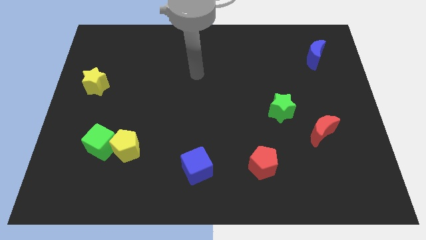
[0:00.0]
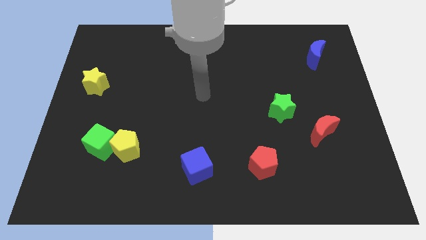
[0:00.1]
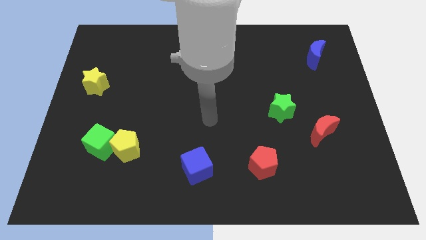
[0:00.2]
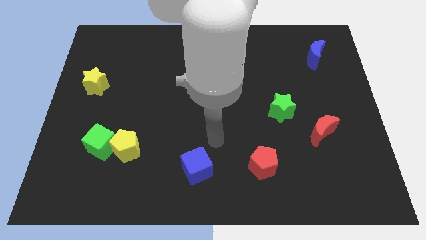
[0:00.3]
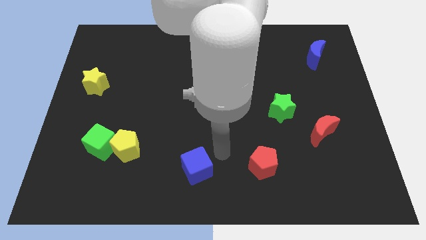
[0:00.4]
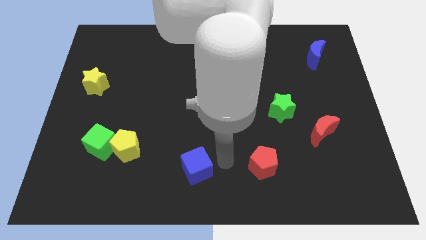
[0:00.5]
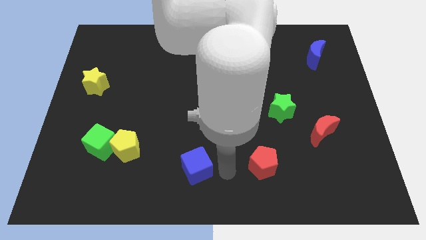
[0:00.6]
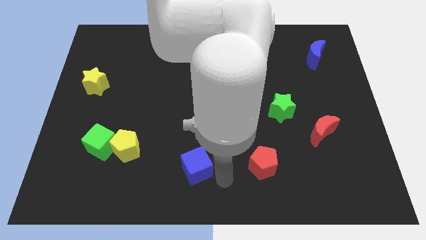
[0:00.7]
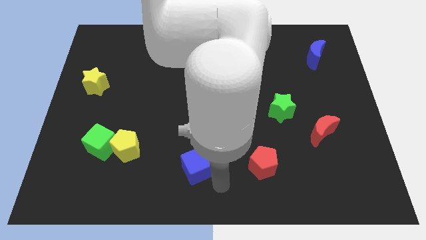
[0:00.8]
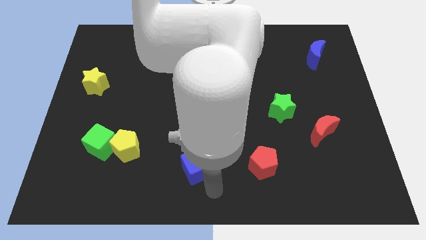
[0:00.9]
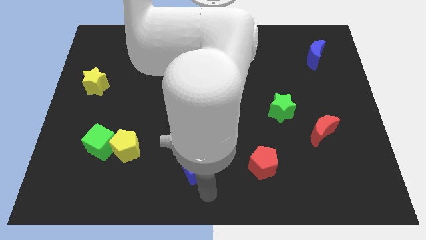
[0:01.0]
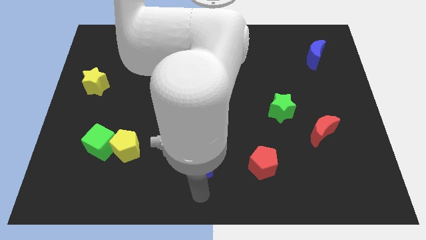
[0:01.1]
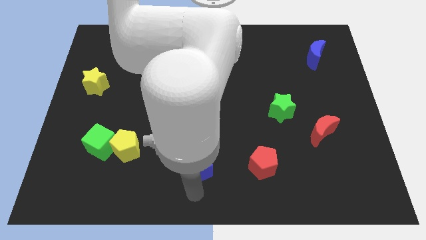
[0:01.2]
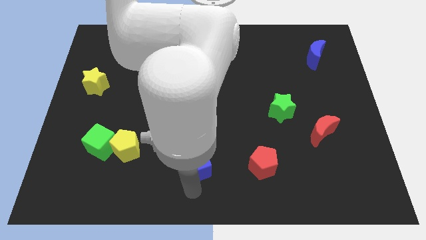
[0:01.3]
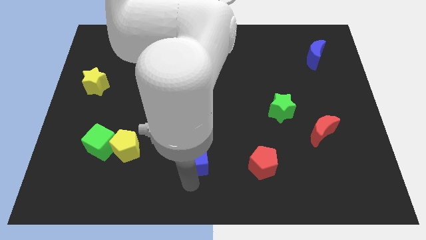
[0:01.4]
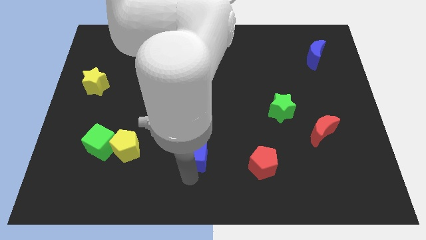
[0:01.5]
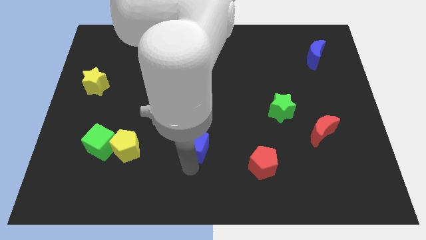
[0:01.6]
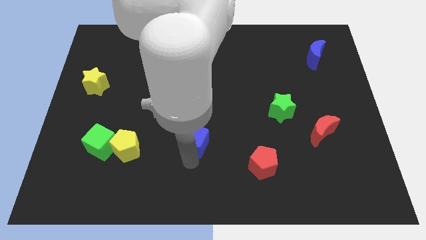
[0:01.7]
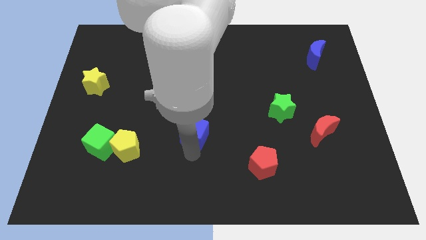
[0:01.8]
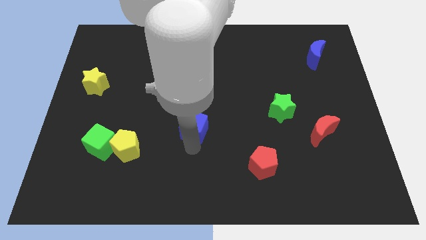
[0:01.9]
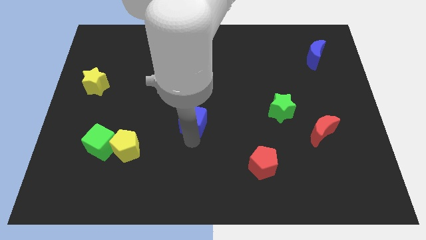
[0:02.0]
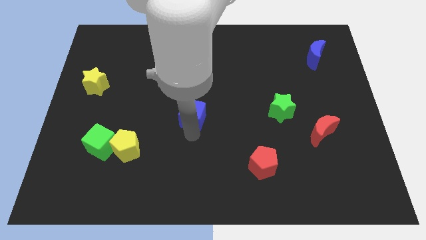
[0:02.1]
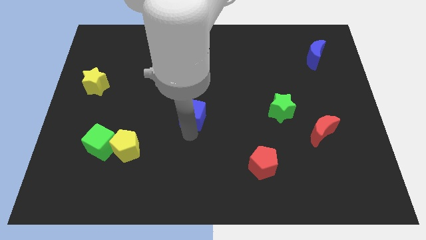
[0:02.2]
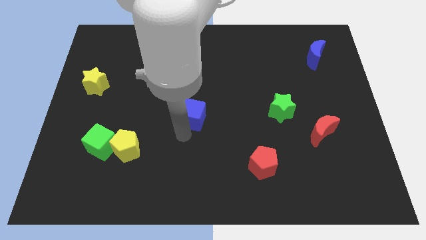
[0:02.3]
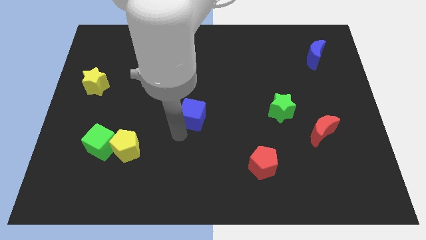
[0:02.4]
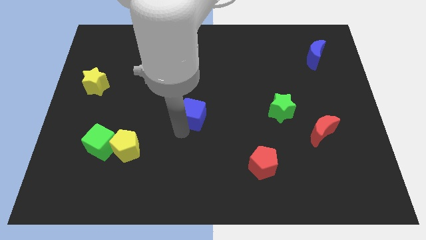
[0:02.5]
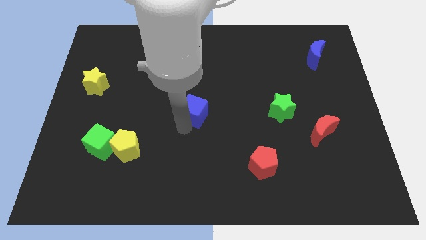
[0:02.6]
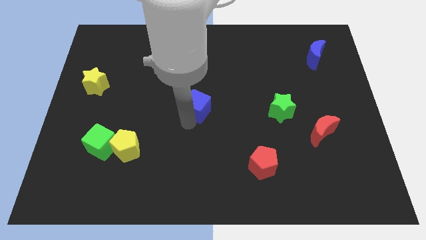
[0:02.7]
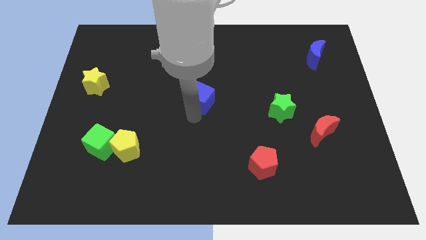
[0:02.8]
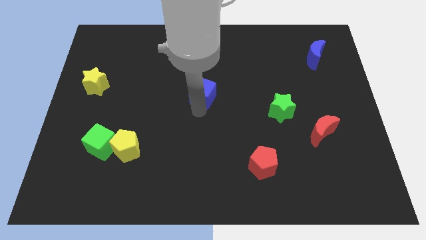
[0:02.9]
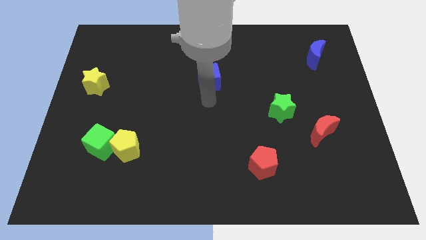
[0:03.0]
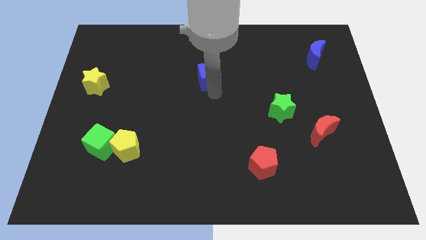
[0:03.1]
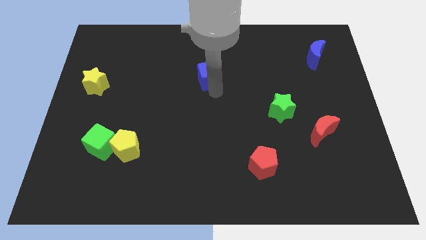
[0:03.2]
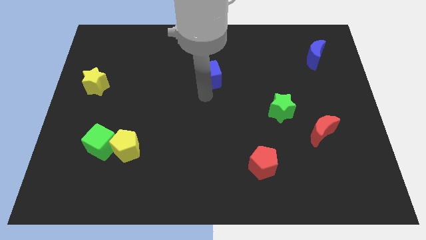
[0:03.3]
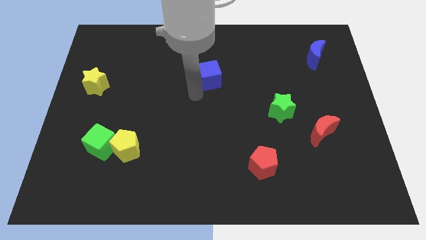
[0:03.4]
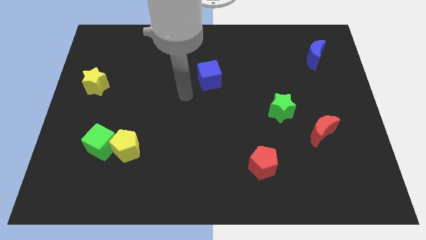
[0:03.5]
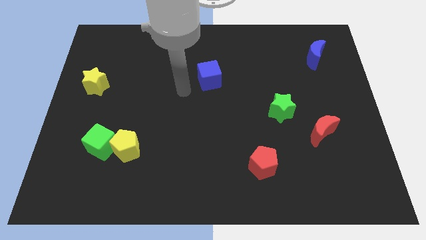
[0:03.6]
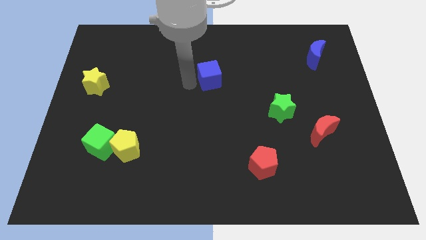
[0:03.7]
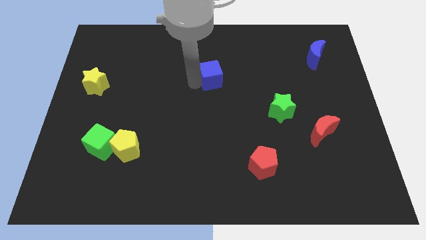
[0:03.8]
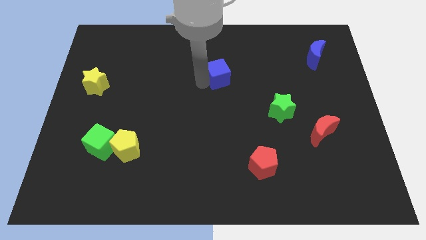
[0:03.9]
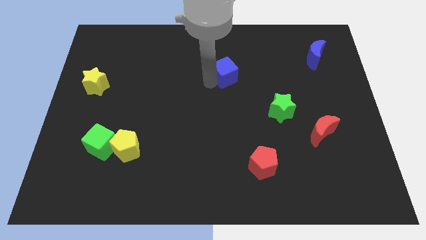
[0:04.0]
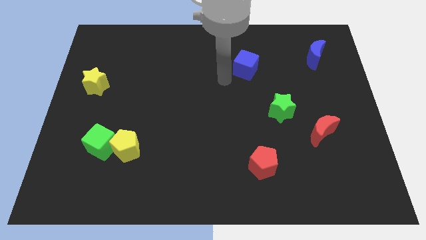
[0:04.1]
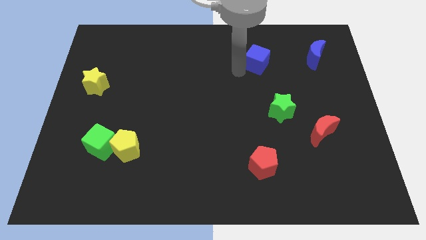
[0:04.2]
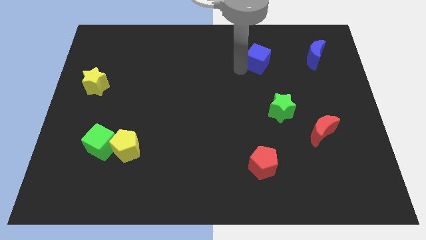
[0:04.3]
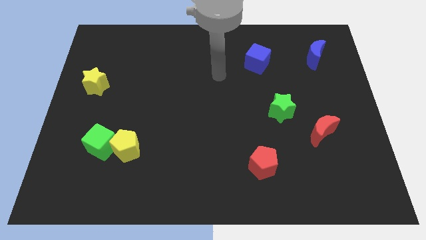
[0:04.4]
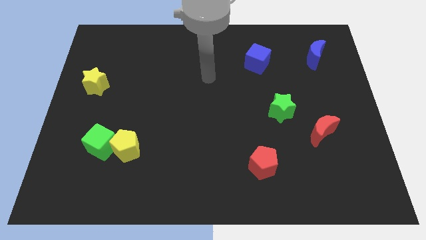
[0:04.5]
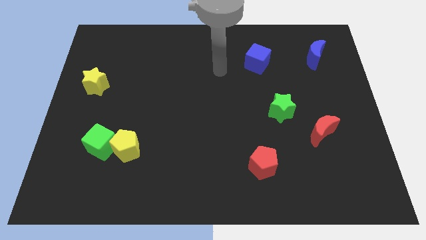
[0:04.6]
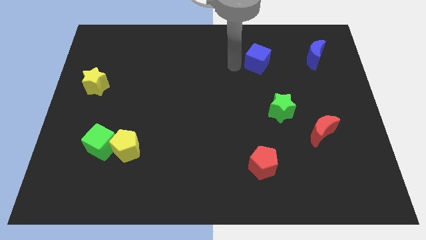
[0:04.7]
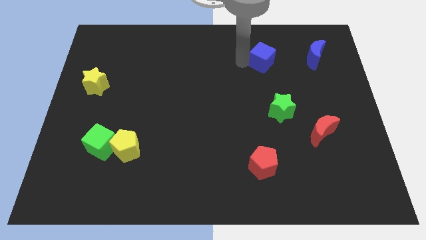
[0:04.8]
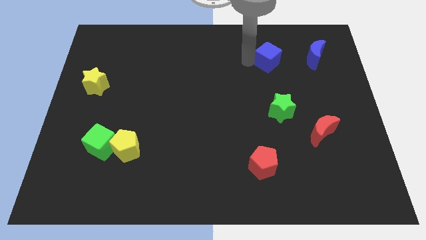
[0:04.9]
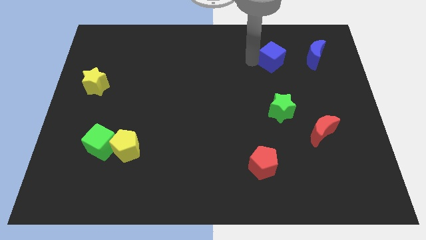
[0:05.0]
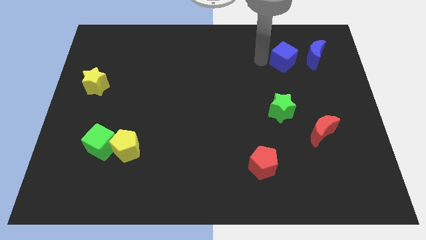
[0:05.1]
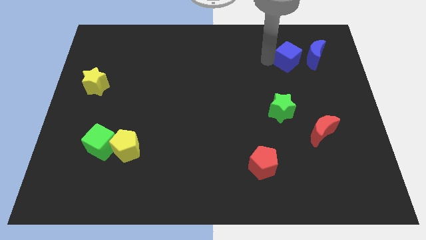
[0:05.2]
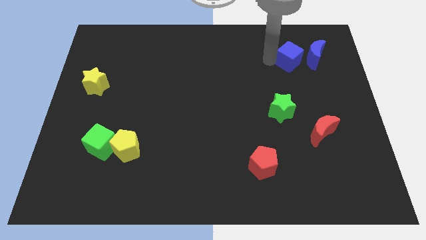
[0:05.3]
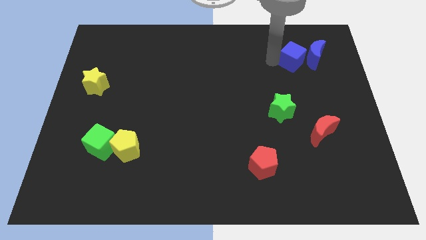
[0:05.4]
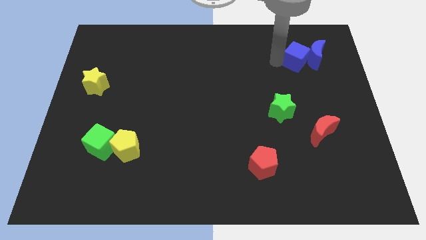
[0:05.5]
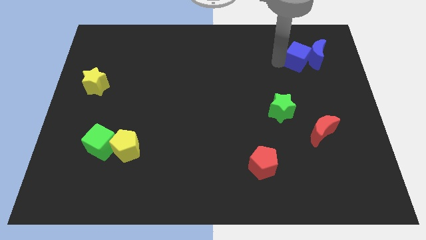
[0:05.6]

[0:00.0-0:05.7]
move the blue cube to the blue moon

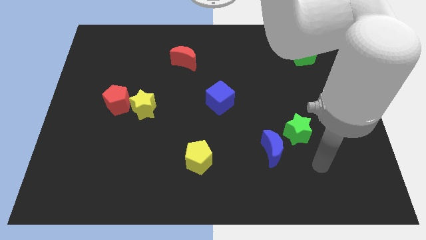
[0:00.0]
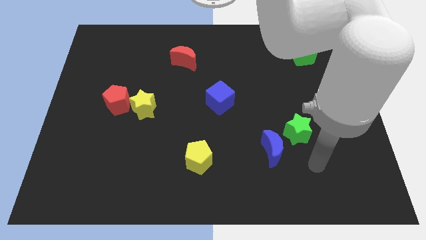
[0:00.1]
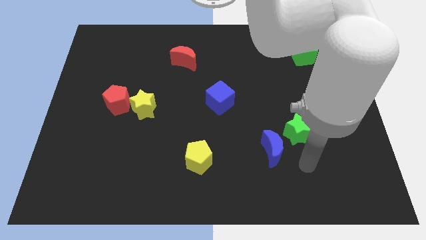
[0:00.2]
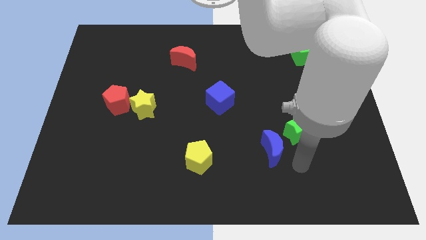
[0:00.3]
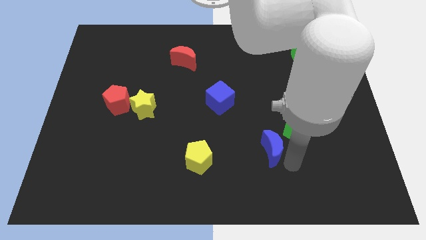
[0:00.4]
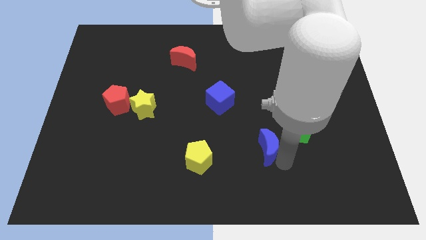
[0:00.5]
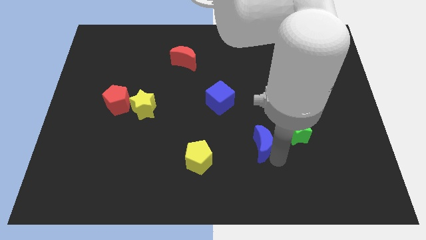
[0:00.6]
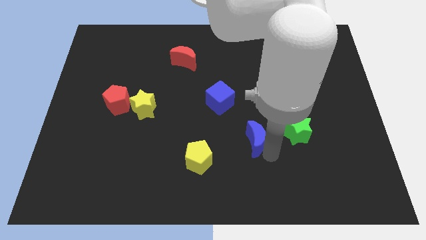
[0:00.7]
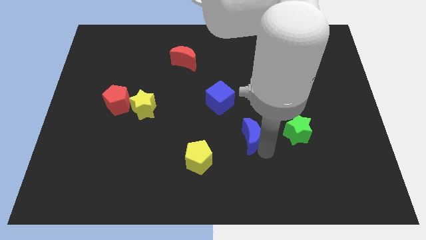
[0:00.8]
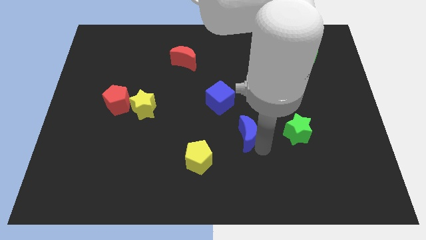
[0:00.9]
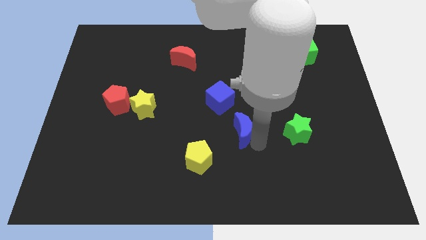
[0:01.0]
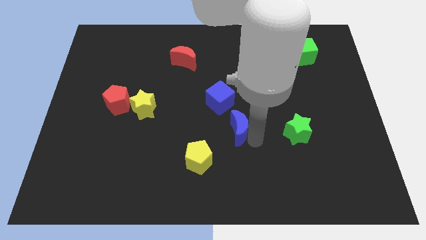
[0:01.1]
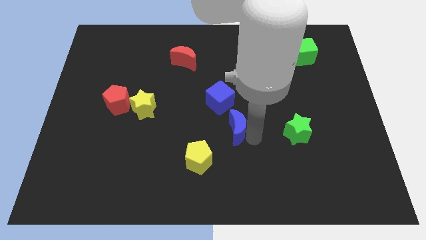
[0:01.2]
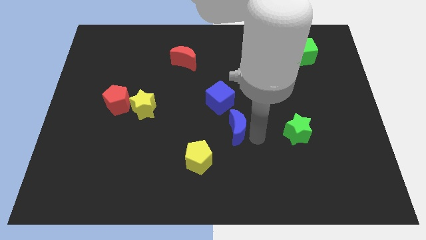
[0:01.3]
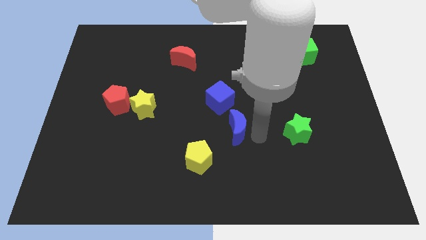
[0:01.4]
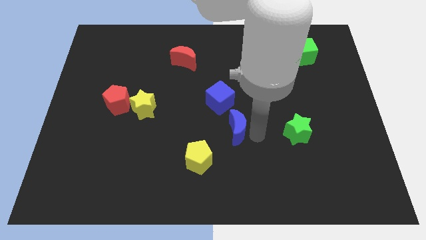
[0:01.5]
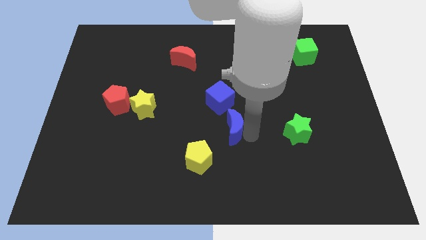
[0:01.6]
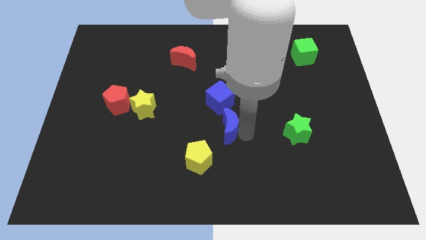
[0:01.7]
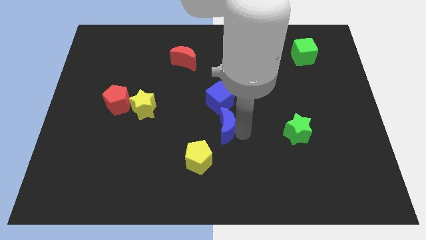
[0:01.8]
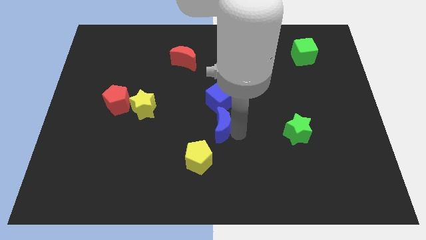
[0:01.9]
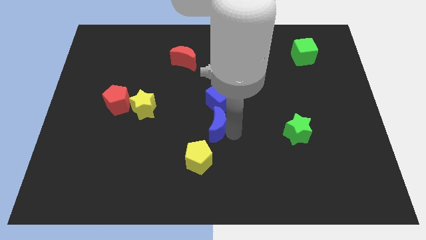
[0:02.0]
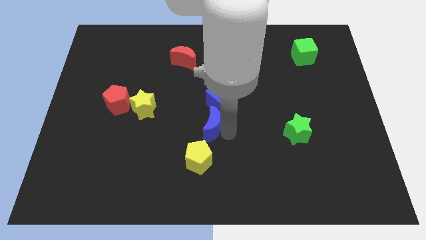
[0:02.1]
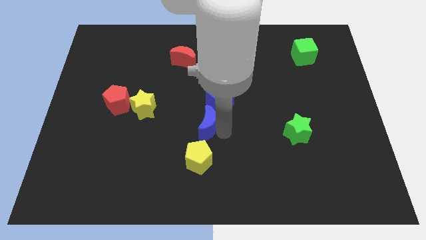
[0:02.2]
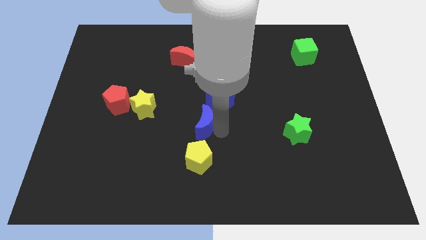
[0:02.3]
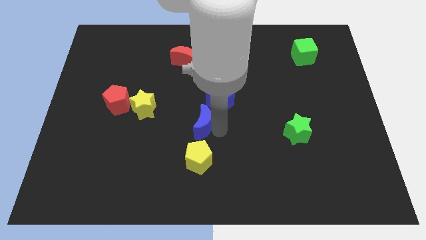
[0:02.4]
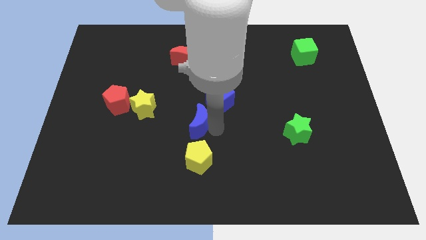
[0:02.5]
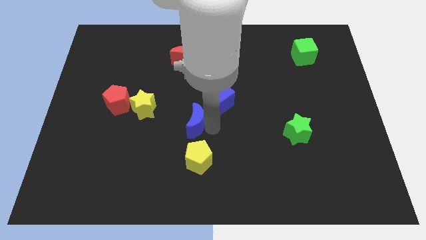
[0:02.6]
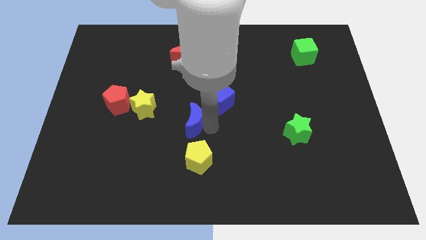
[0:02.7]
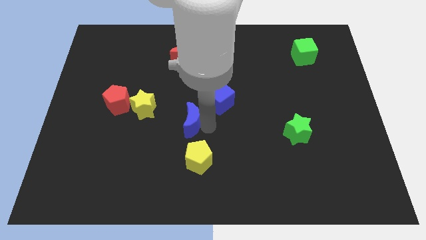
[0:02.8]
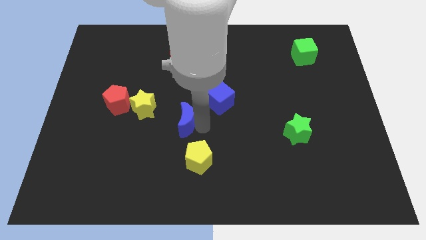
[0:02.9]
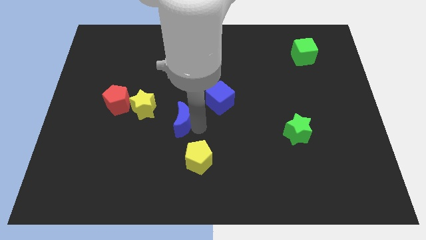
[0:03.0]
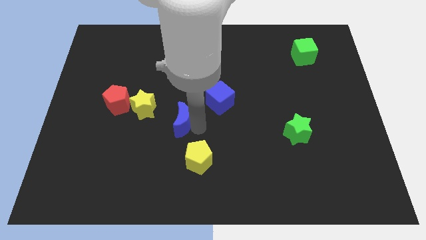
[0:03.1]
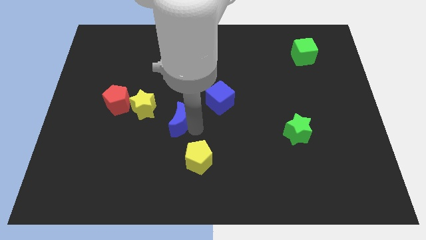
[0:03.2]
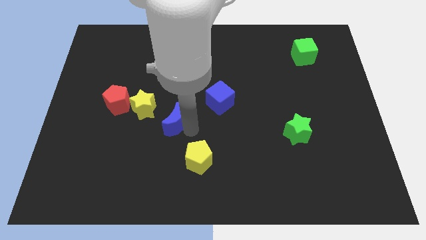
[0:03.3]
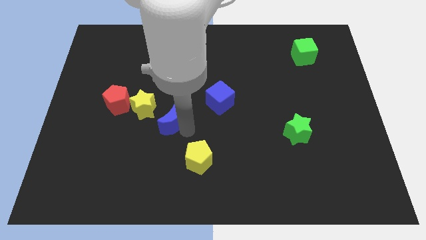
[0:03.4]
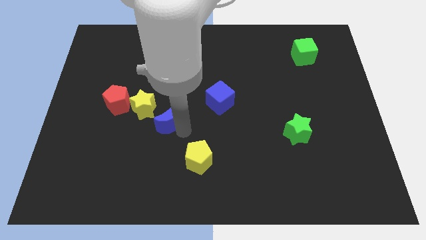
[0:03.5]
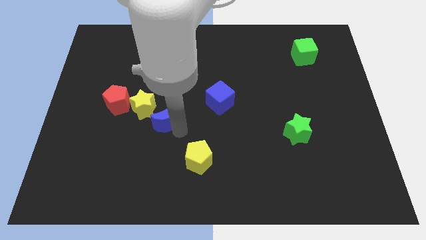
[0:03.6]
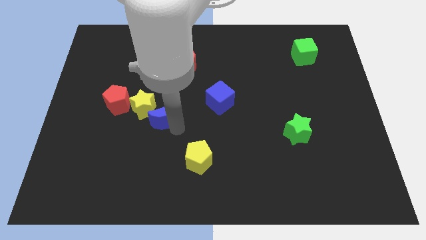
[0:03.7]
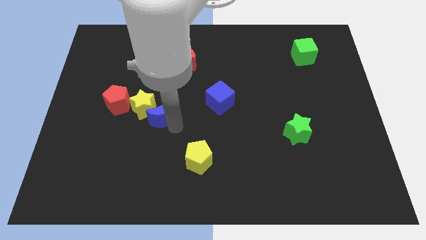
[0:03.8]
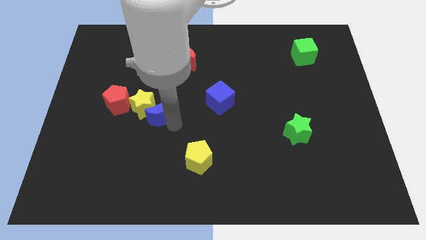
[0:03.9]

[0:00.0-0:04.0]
put the blue moon to the yellow star
